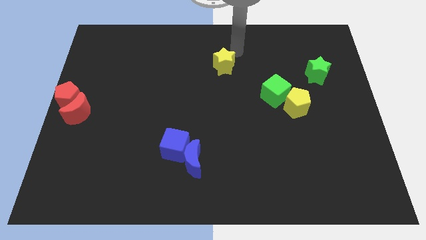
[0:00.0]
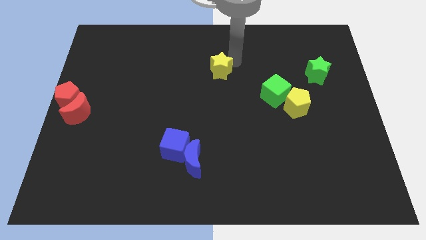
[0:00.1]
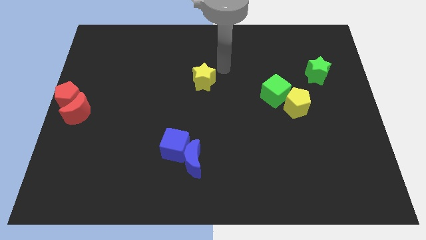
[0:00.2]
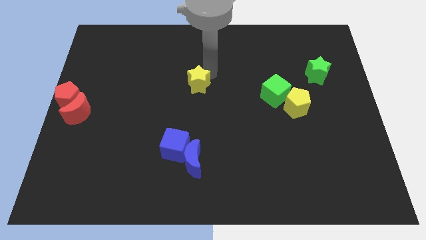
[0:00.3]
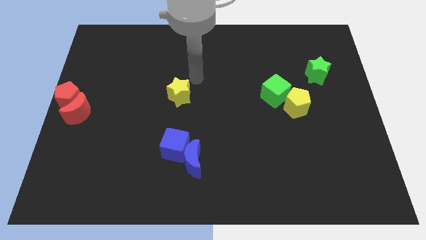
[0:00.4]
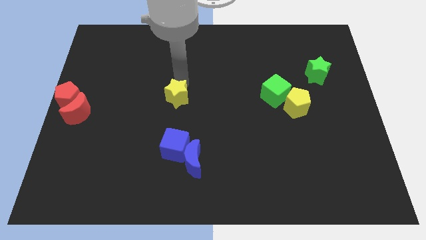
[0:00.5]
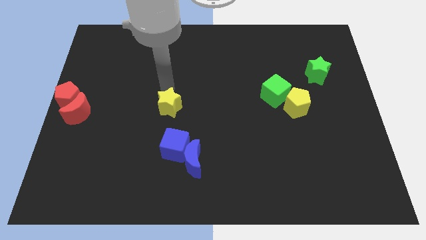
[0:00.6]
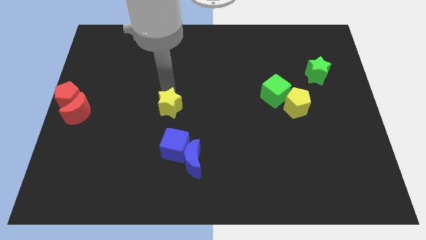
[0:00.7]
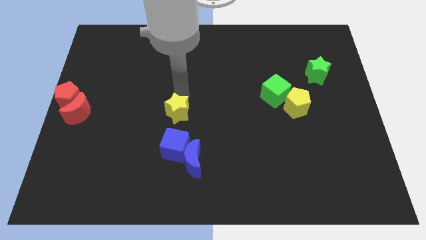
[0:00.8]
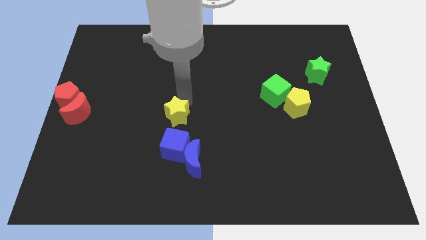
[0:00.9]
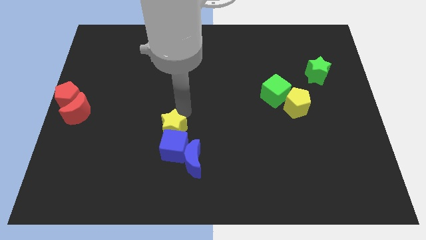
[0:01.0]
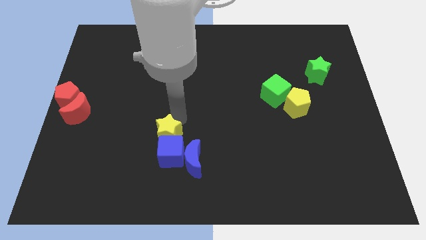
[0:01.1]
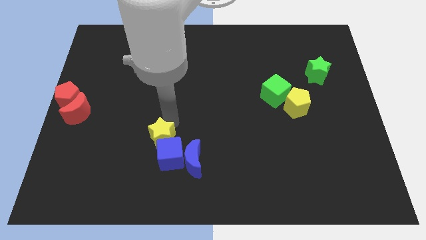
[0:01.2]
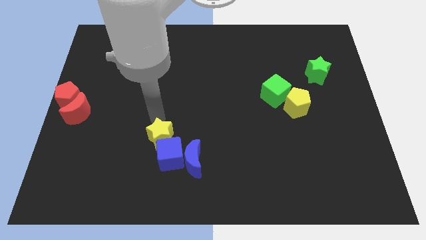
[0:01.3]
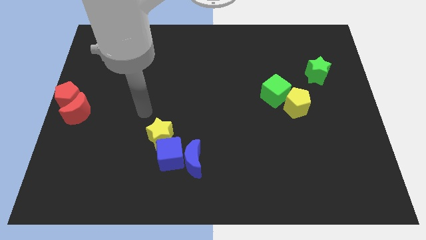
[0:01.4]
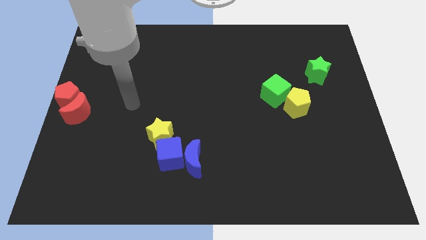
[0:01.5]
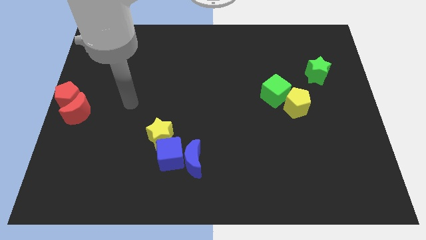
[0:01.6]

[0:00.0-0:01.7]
push the yellow star into the blue cube

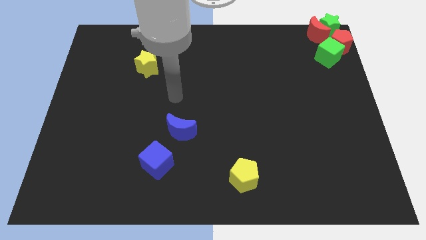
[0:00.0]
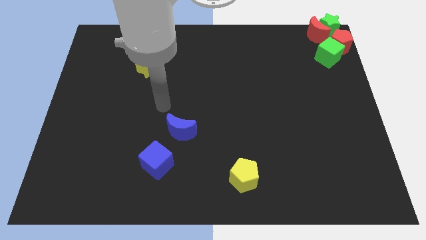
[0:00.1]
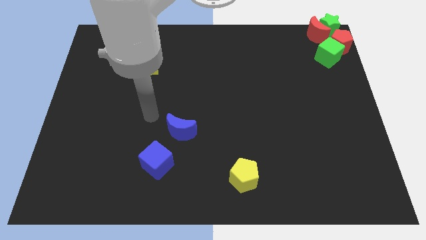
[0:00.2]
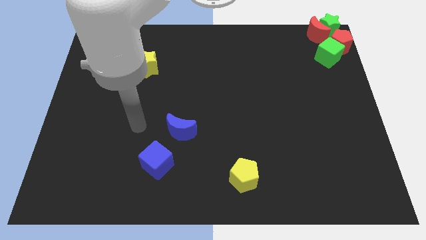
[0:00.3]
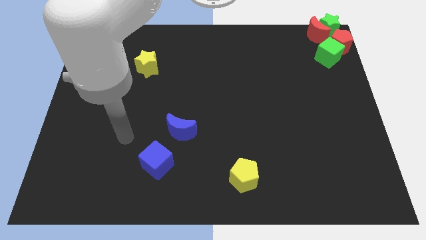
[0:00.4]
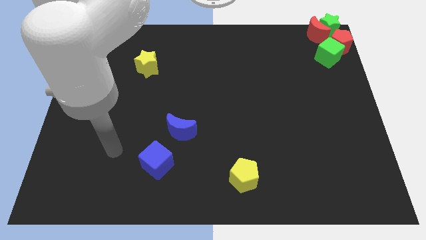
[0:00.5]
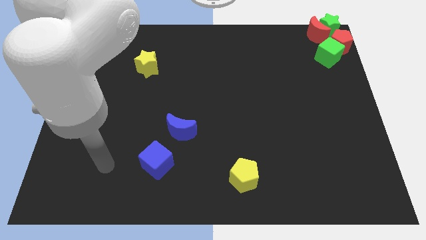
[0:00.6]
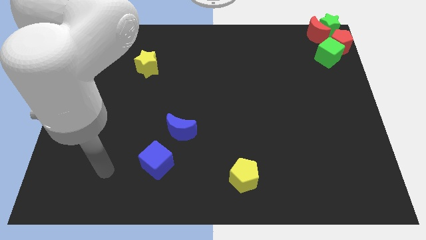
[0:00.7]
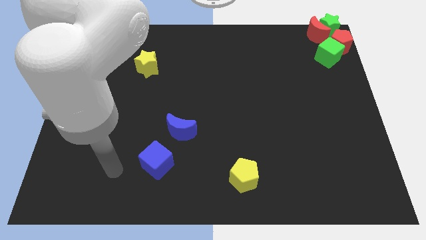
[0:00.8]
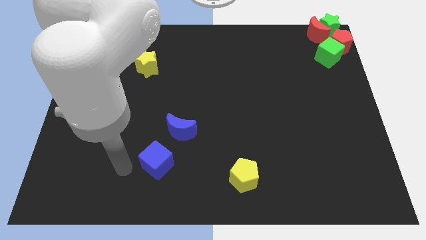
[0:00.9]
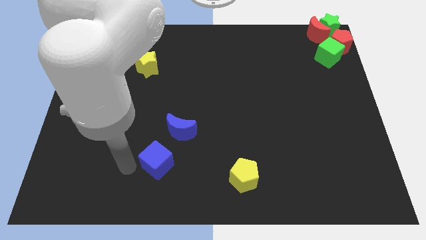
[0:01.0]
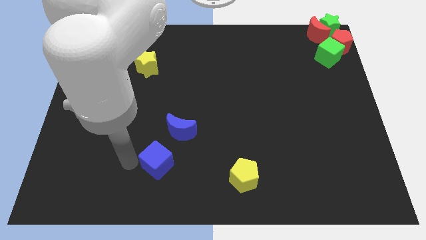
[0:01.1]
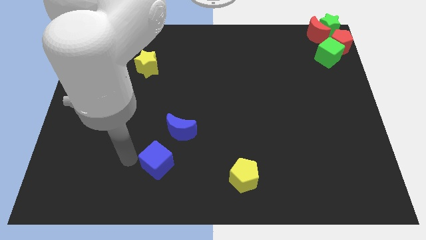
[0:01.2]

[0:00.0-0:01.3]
move the arm at the left side of the blue cube

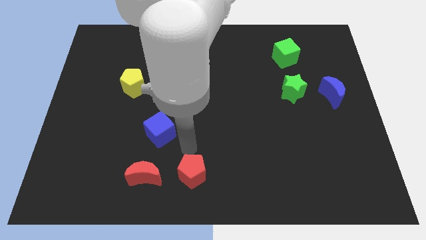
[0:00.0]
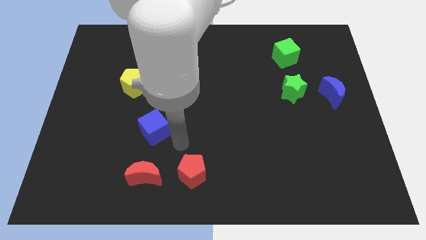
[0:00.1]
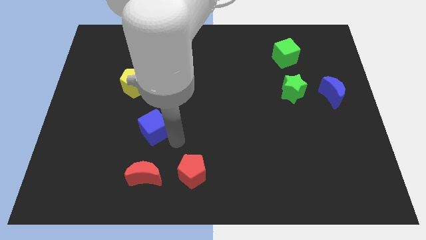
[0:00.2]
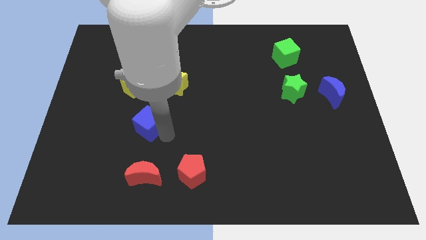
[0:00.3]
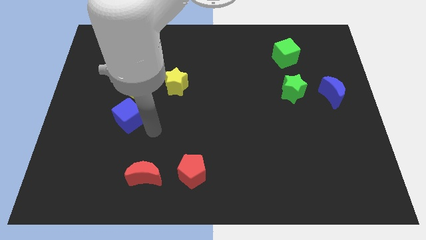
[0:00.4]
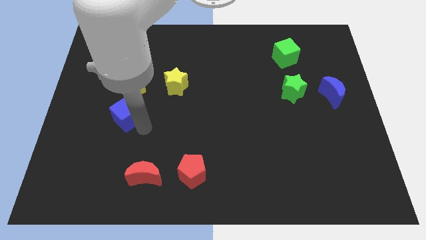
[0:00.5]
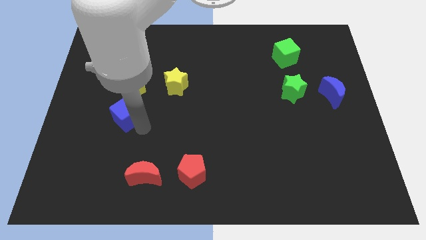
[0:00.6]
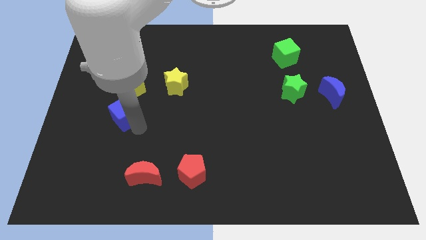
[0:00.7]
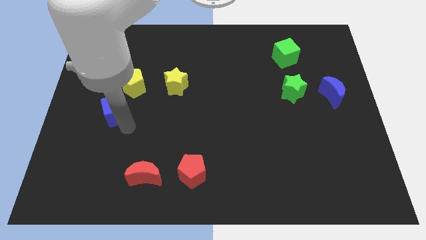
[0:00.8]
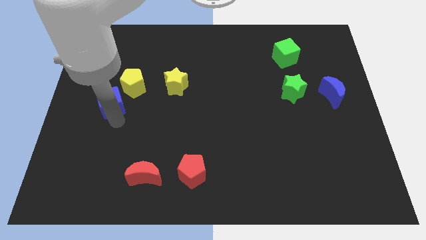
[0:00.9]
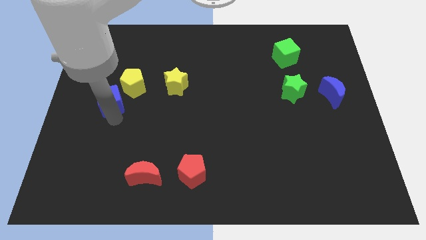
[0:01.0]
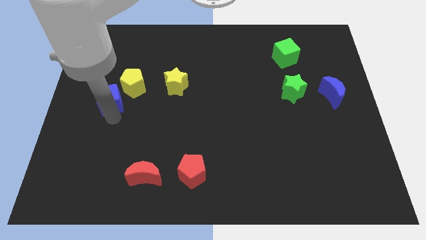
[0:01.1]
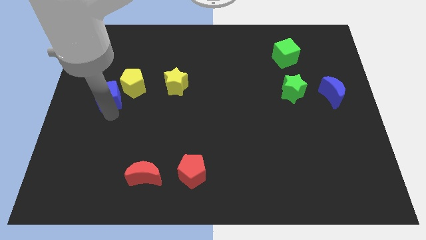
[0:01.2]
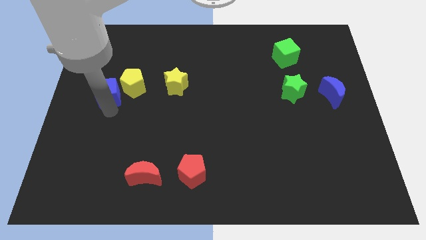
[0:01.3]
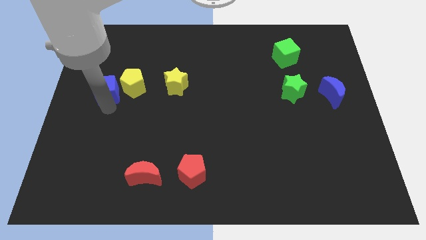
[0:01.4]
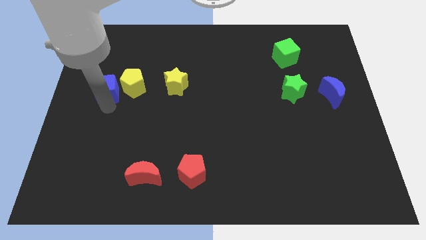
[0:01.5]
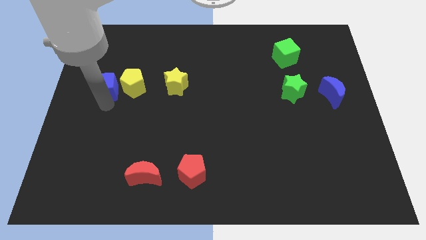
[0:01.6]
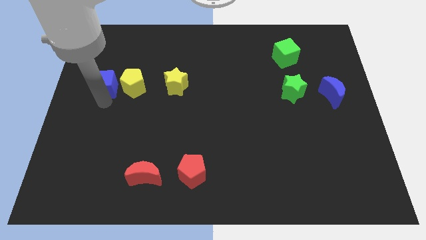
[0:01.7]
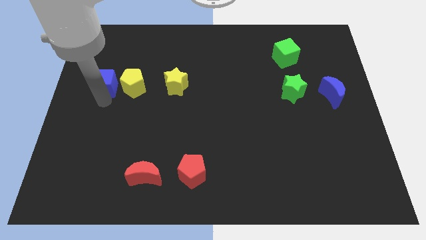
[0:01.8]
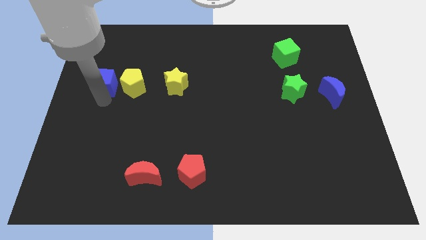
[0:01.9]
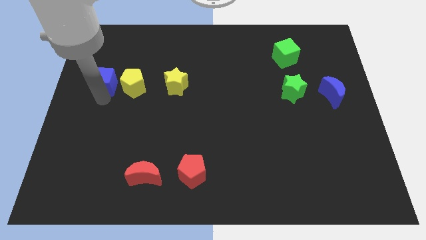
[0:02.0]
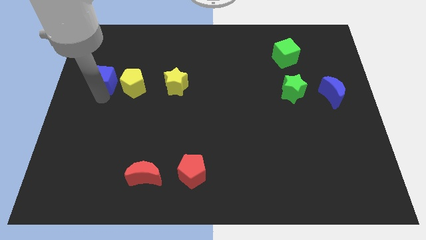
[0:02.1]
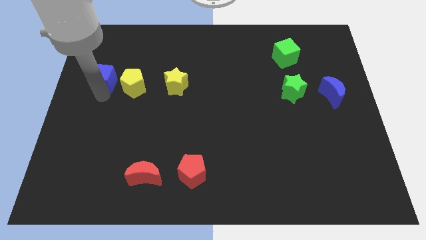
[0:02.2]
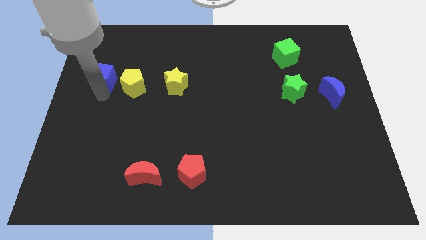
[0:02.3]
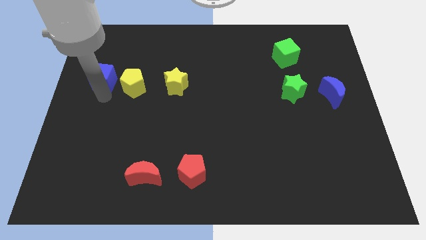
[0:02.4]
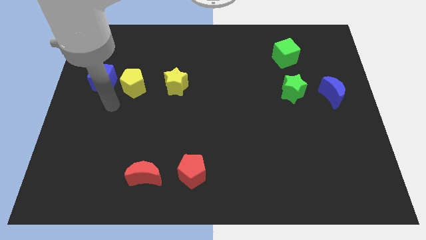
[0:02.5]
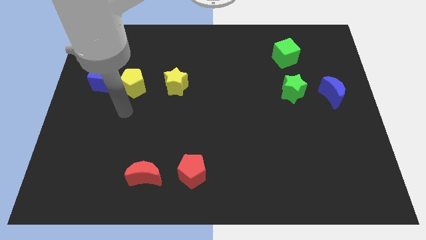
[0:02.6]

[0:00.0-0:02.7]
place blue cube to the left of the yellow pentagon

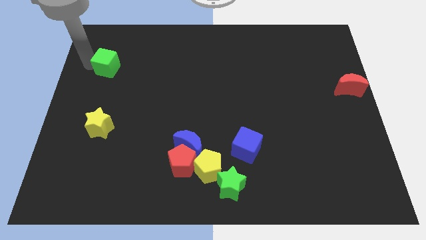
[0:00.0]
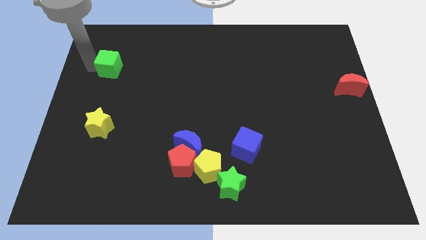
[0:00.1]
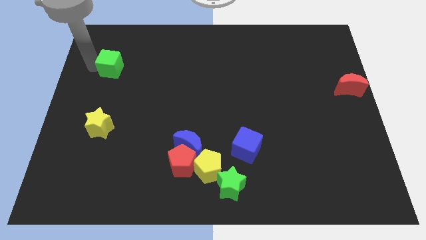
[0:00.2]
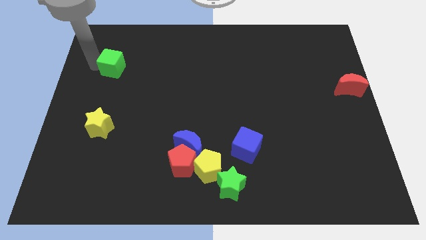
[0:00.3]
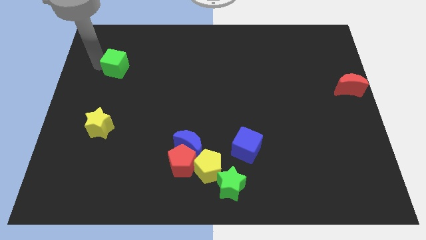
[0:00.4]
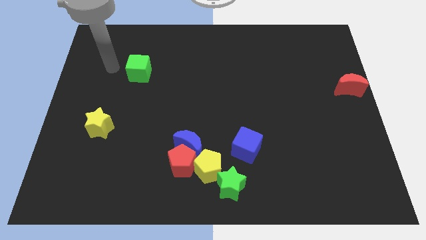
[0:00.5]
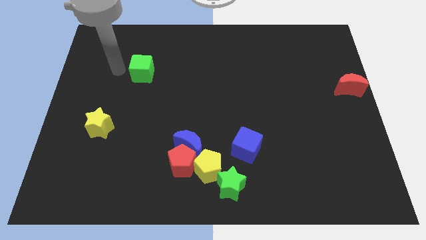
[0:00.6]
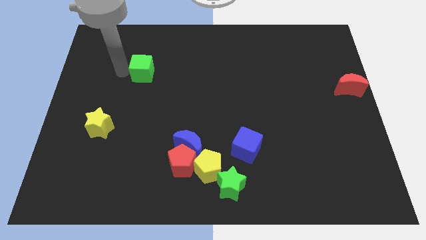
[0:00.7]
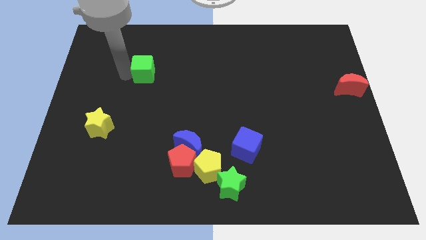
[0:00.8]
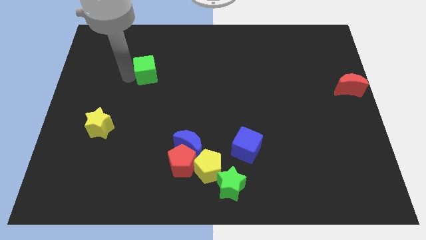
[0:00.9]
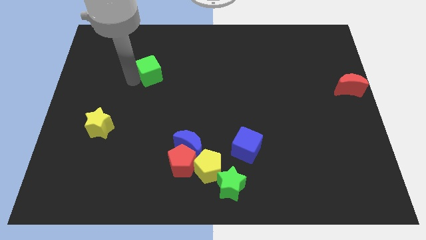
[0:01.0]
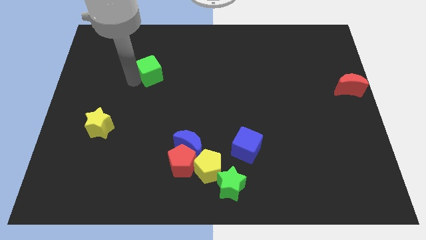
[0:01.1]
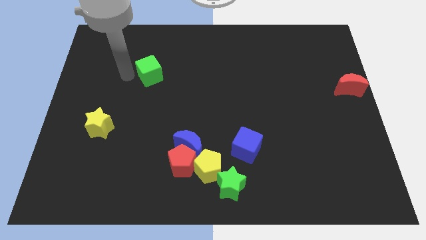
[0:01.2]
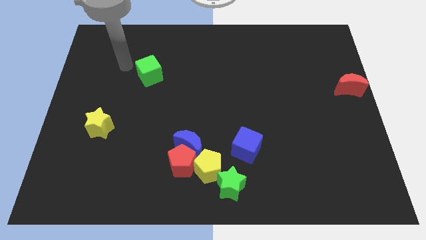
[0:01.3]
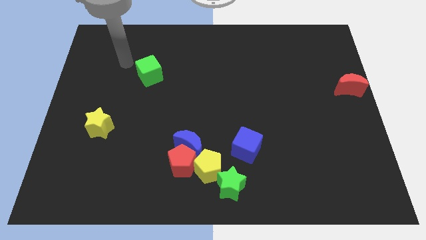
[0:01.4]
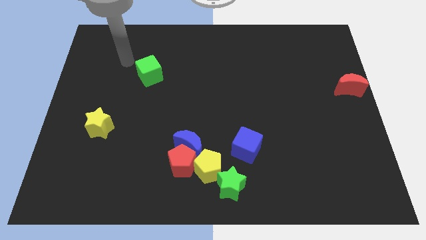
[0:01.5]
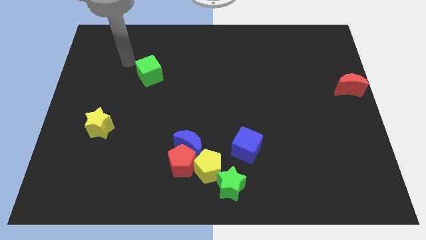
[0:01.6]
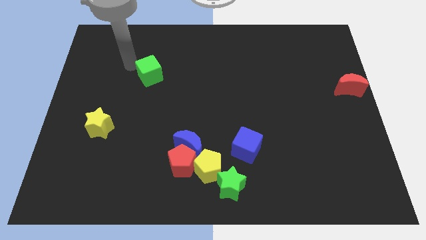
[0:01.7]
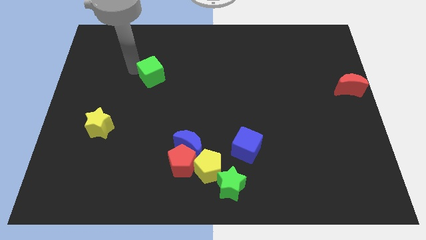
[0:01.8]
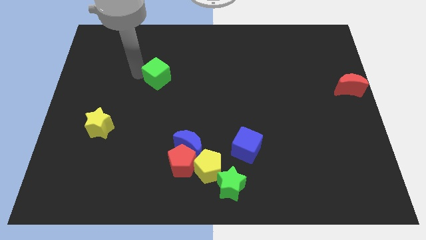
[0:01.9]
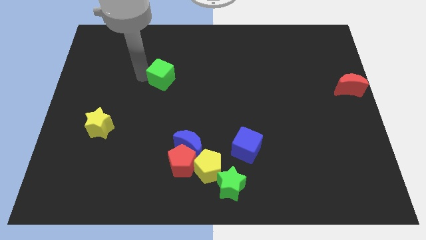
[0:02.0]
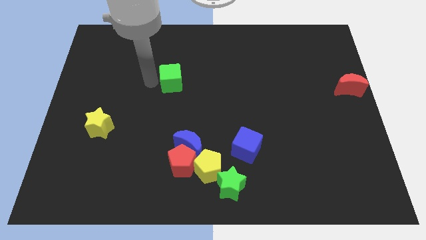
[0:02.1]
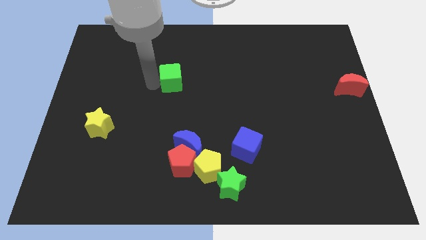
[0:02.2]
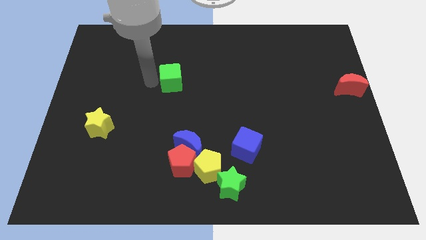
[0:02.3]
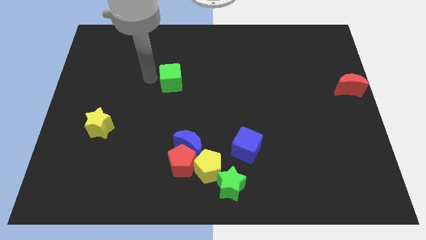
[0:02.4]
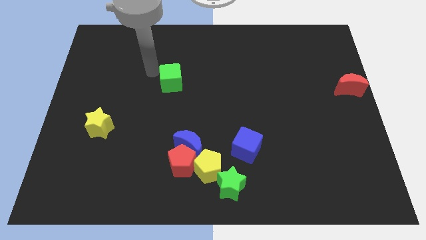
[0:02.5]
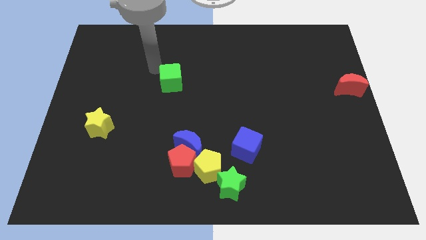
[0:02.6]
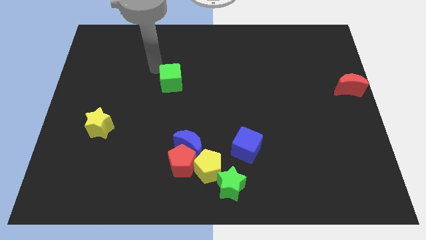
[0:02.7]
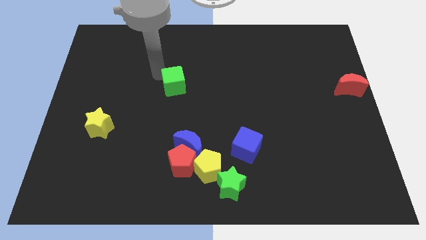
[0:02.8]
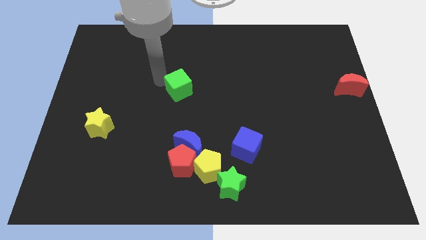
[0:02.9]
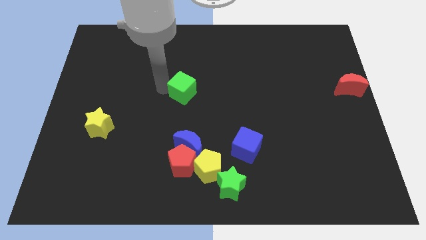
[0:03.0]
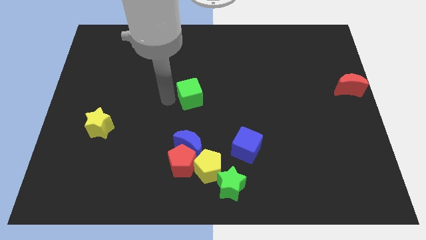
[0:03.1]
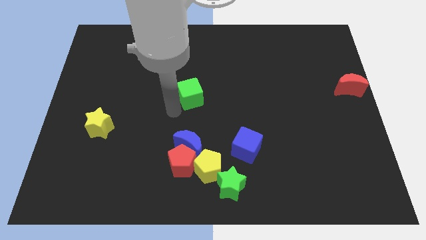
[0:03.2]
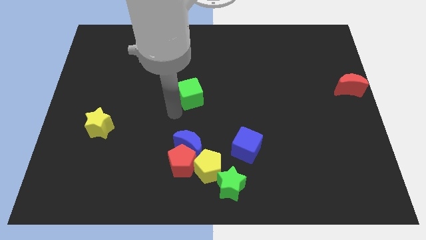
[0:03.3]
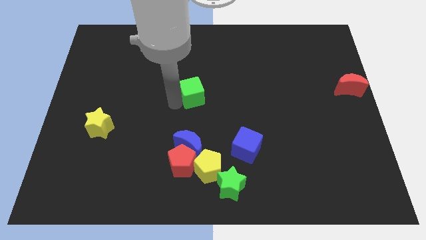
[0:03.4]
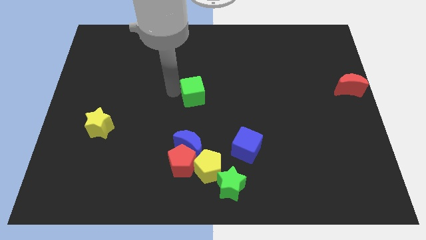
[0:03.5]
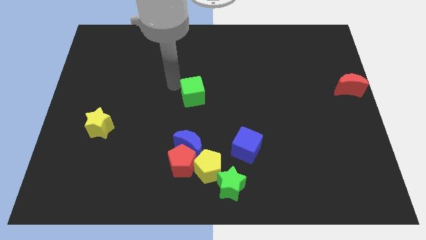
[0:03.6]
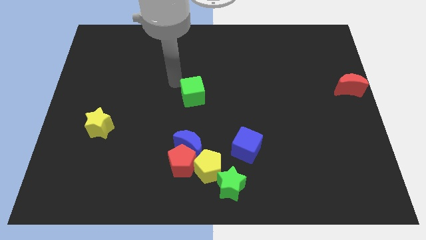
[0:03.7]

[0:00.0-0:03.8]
move the green cube to the top of the blue crescent
